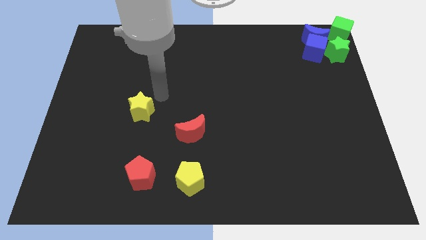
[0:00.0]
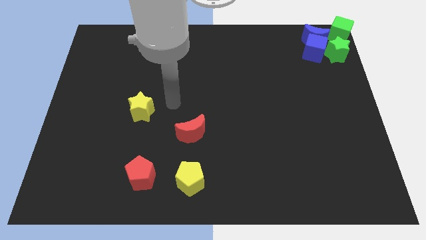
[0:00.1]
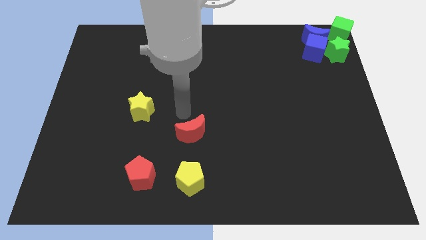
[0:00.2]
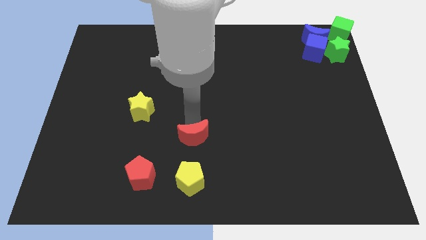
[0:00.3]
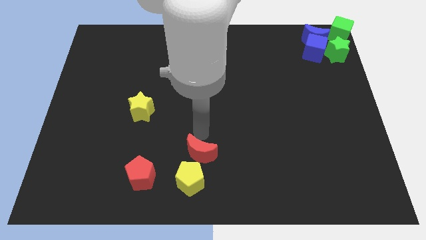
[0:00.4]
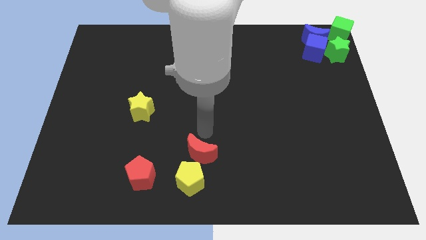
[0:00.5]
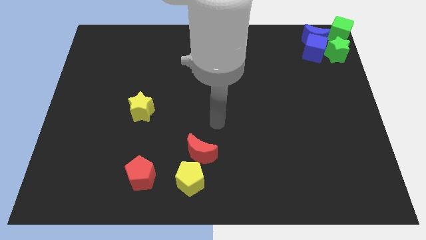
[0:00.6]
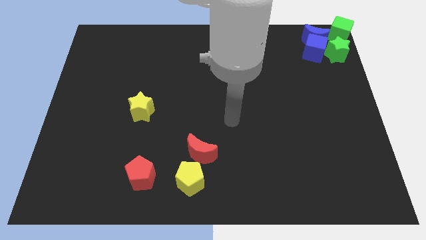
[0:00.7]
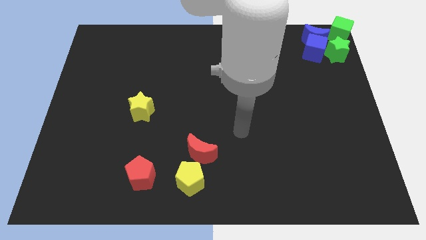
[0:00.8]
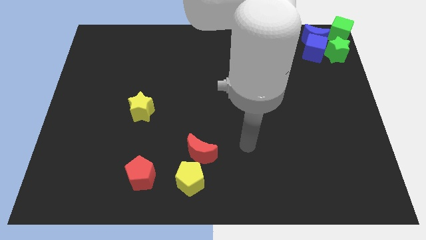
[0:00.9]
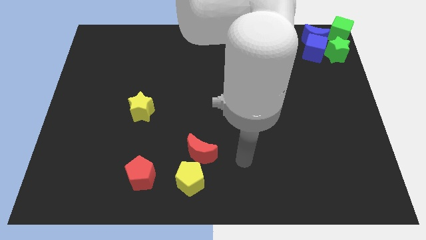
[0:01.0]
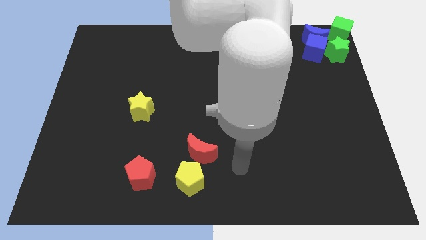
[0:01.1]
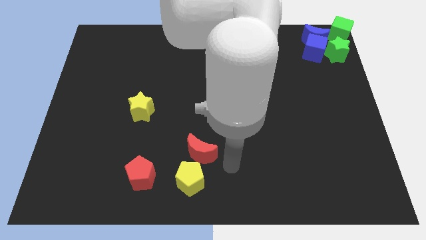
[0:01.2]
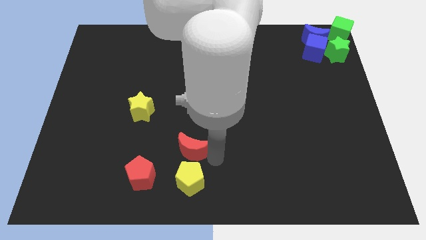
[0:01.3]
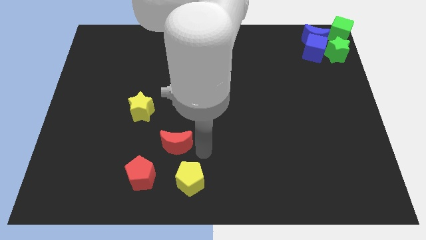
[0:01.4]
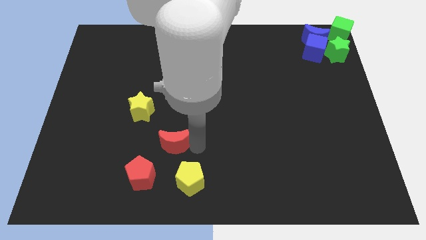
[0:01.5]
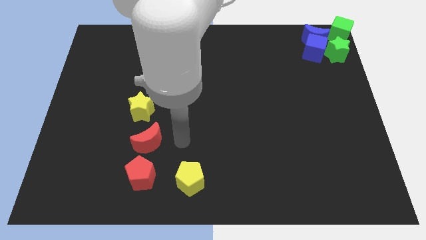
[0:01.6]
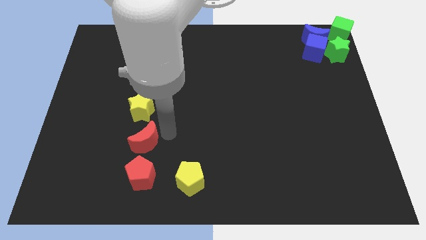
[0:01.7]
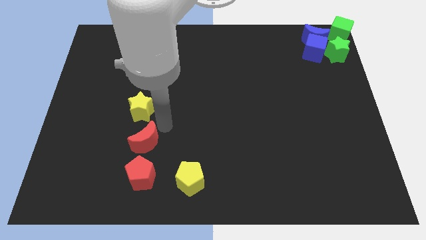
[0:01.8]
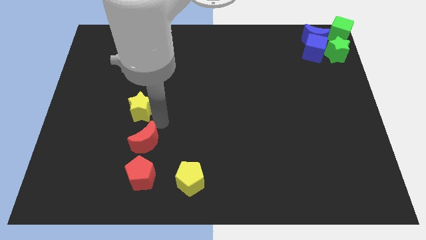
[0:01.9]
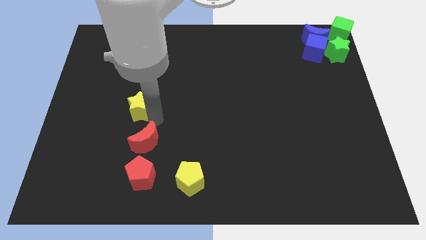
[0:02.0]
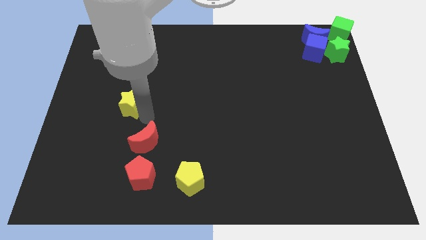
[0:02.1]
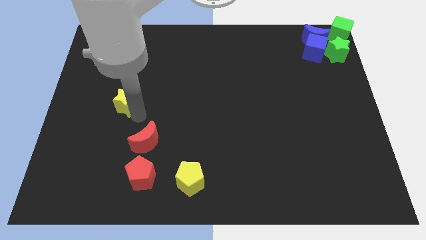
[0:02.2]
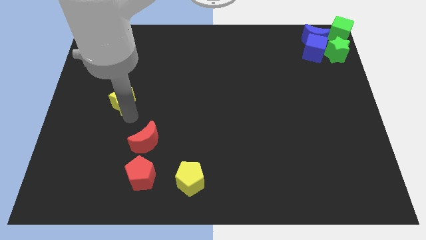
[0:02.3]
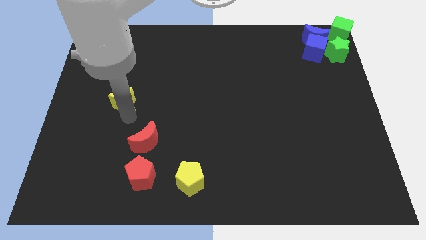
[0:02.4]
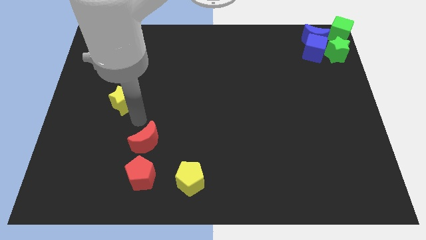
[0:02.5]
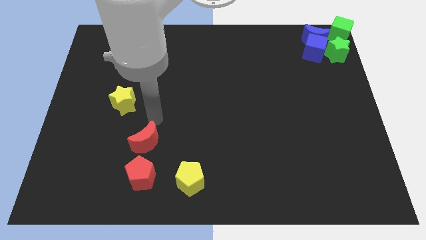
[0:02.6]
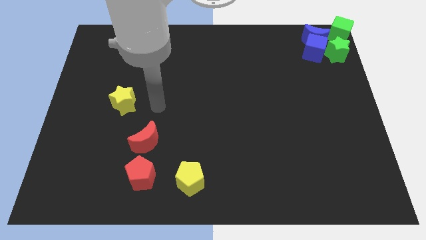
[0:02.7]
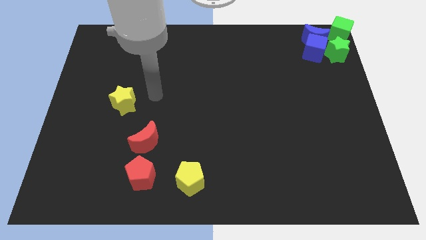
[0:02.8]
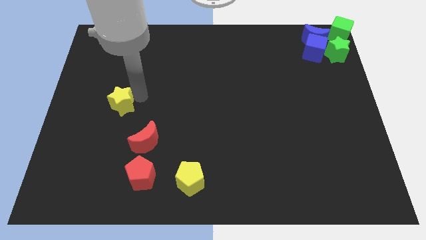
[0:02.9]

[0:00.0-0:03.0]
place the red crescent above the red pentagon

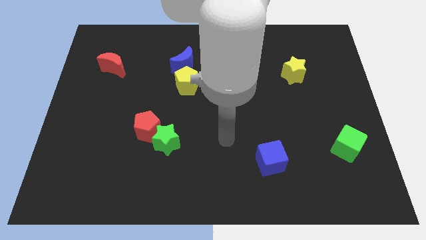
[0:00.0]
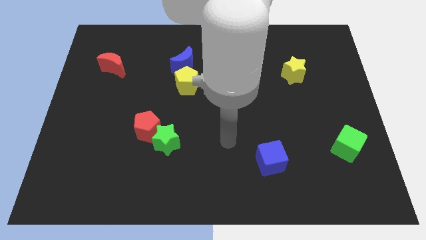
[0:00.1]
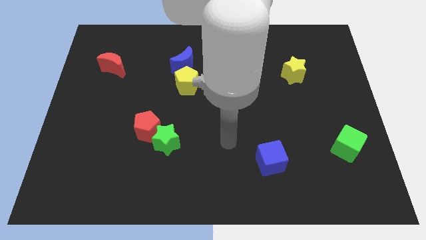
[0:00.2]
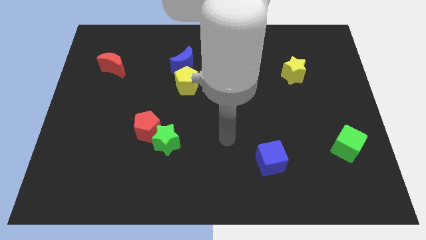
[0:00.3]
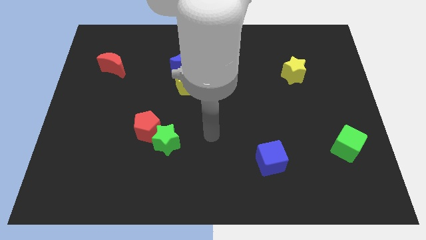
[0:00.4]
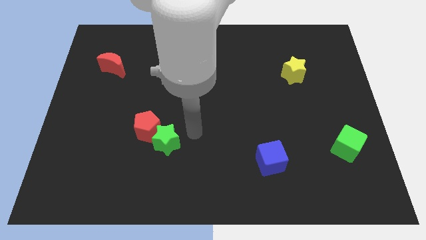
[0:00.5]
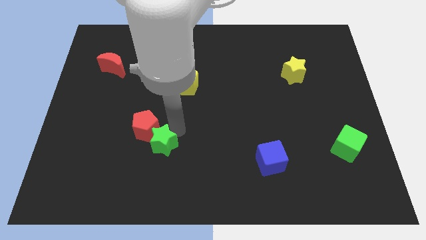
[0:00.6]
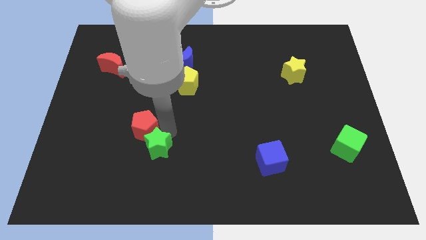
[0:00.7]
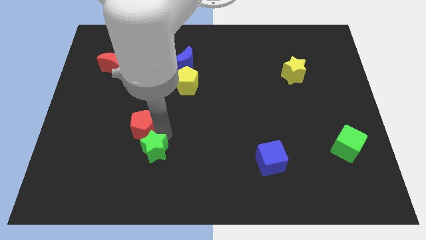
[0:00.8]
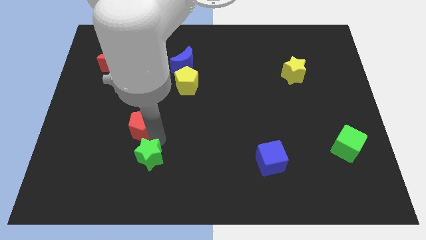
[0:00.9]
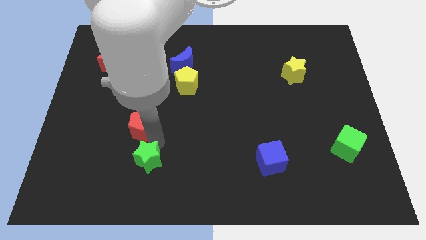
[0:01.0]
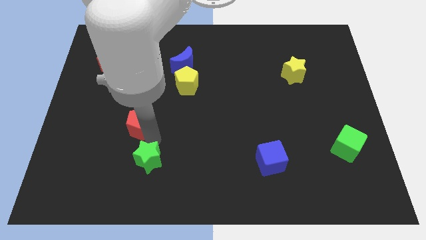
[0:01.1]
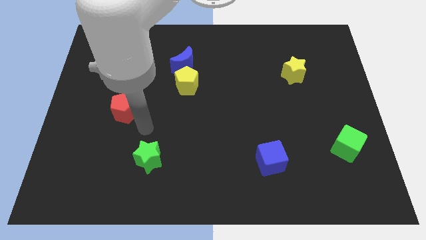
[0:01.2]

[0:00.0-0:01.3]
push the green star to the bottom center of the board

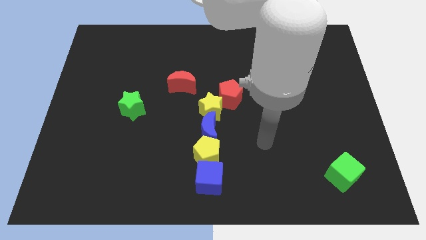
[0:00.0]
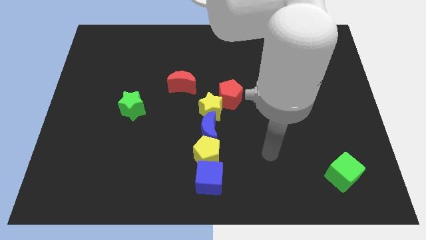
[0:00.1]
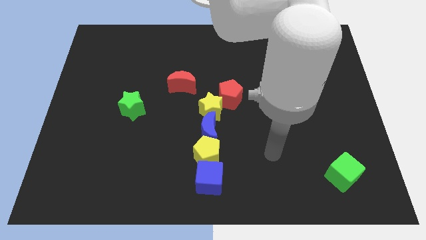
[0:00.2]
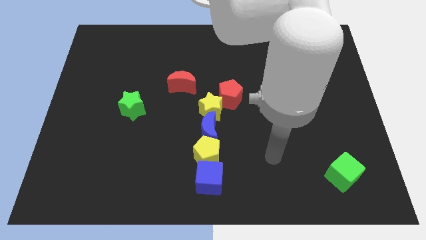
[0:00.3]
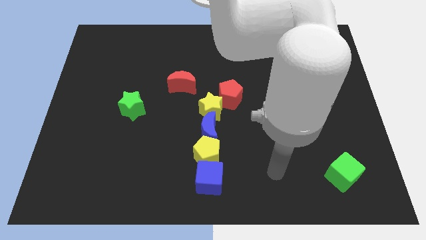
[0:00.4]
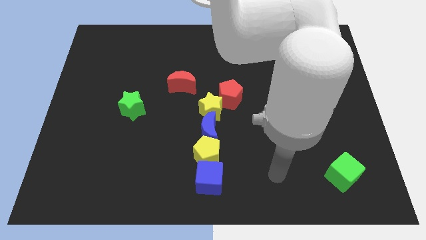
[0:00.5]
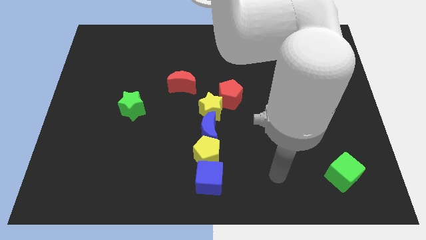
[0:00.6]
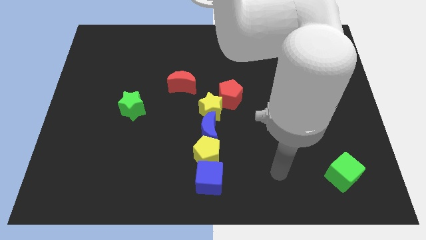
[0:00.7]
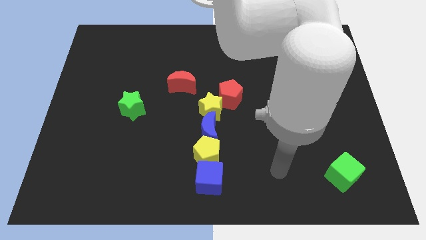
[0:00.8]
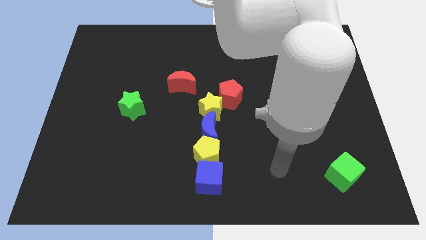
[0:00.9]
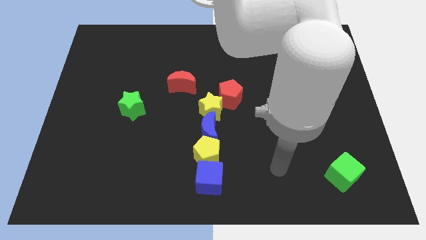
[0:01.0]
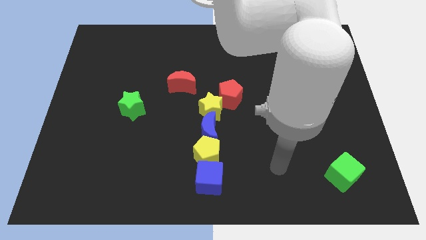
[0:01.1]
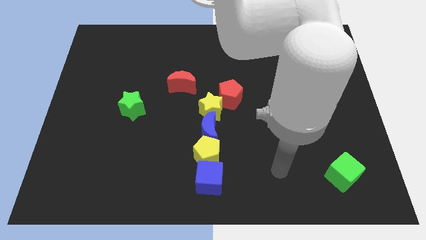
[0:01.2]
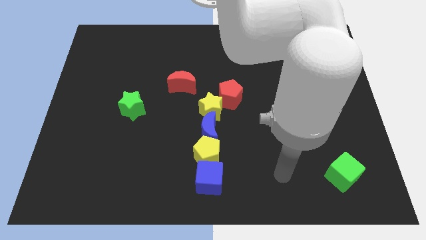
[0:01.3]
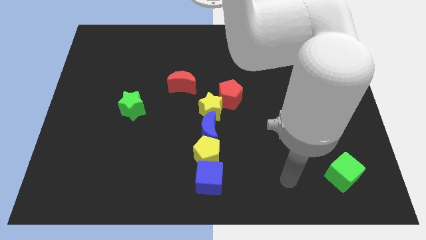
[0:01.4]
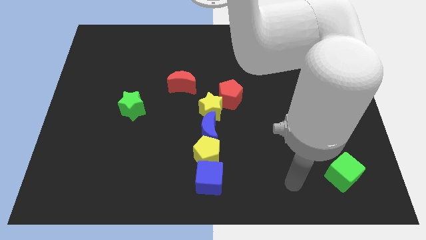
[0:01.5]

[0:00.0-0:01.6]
point your hand at the left of the green cube

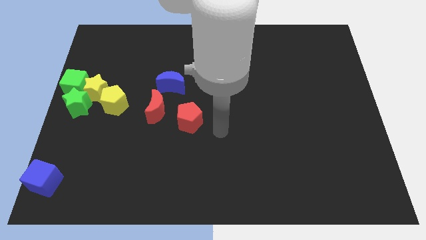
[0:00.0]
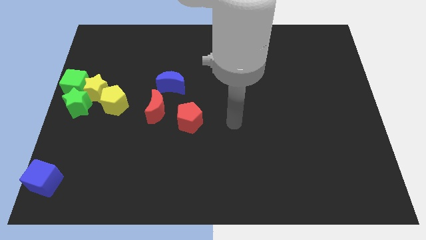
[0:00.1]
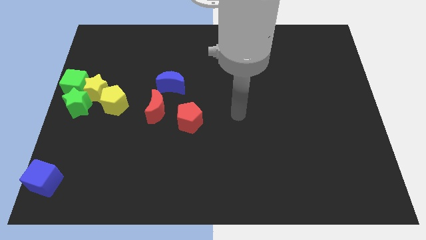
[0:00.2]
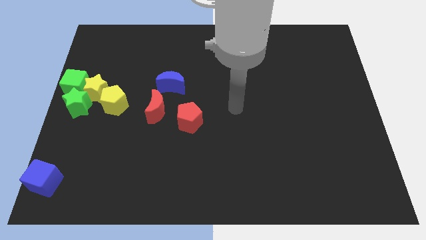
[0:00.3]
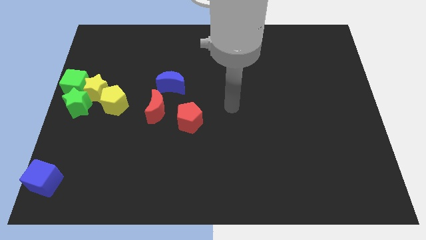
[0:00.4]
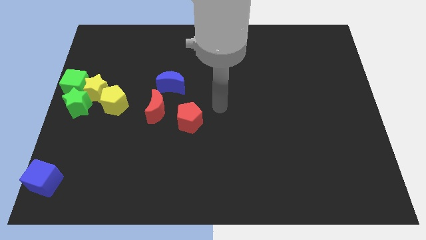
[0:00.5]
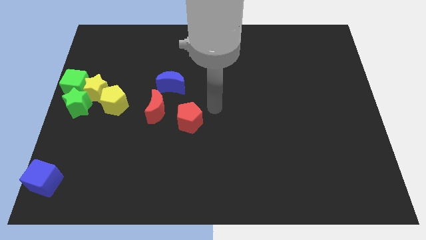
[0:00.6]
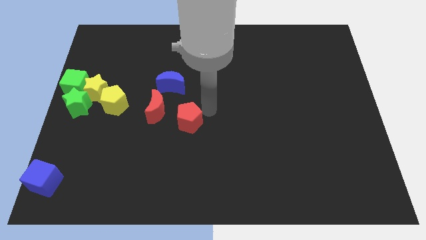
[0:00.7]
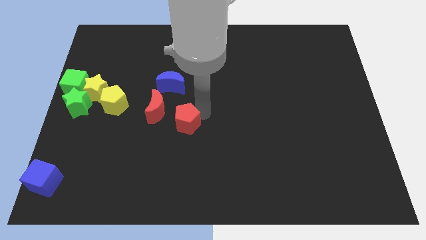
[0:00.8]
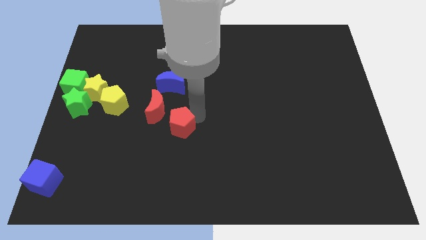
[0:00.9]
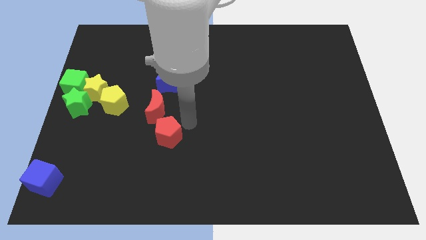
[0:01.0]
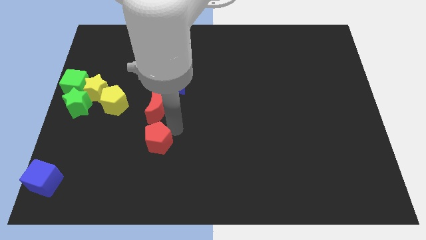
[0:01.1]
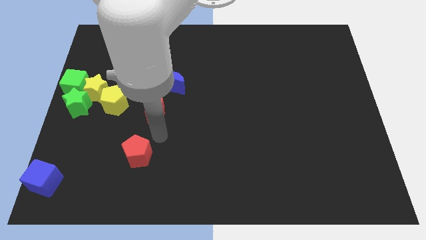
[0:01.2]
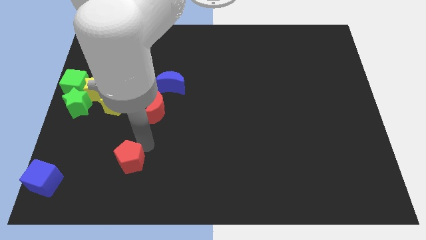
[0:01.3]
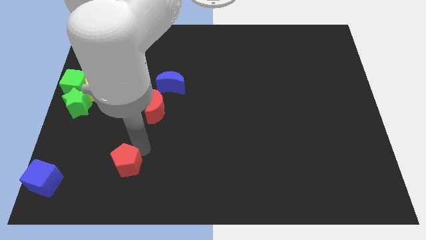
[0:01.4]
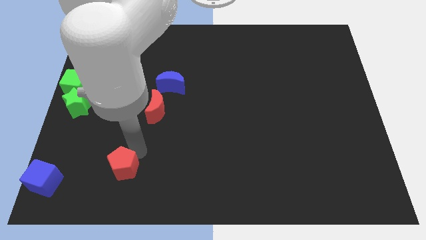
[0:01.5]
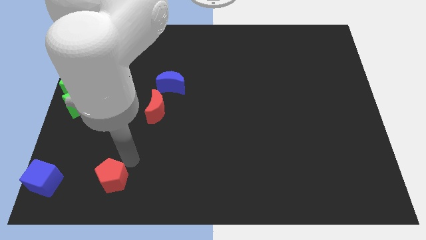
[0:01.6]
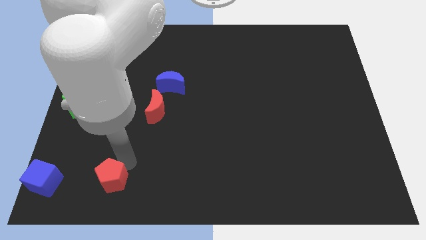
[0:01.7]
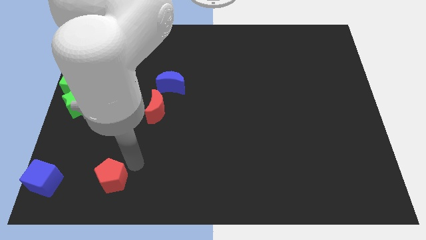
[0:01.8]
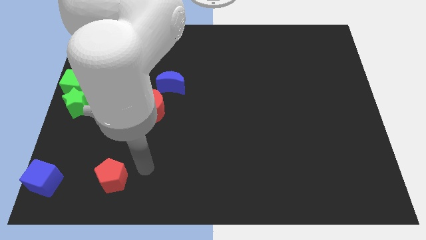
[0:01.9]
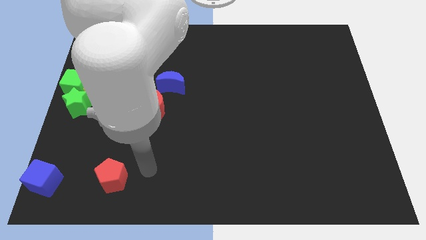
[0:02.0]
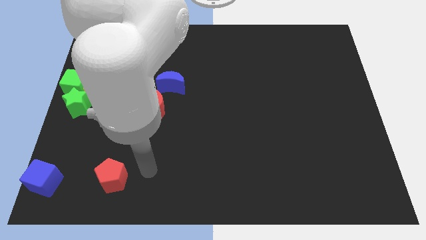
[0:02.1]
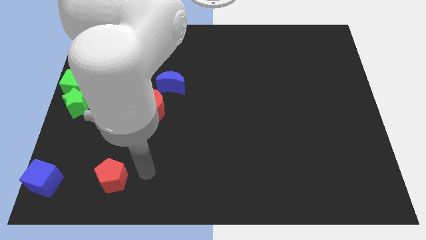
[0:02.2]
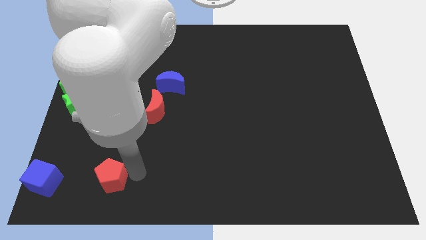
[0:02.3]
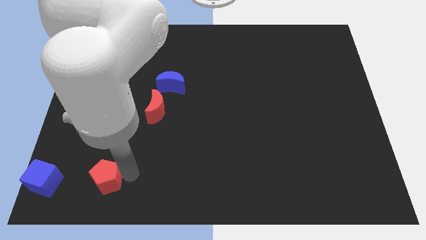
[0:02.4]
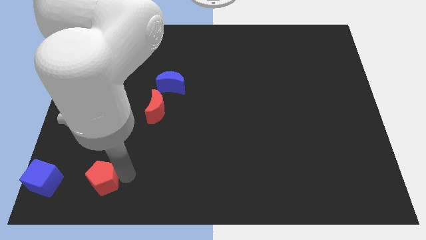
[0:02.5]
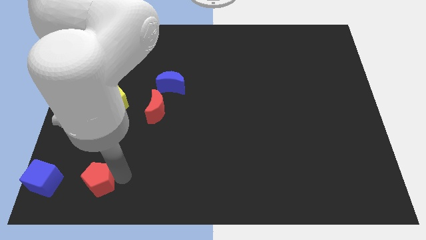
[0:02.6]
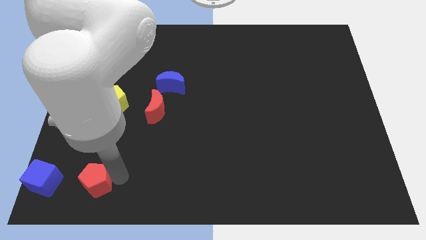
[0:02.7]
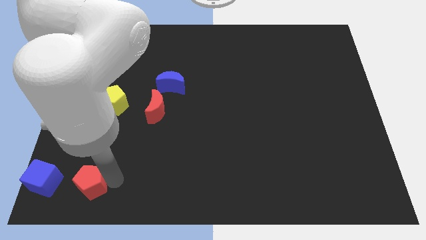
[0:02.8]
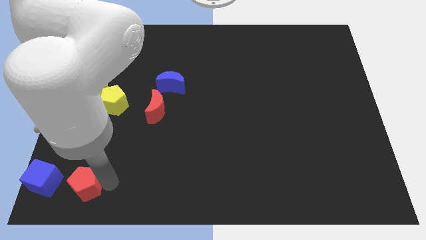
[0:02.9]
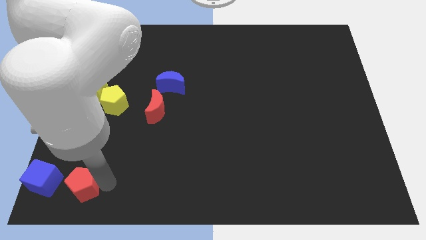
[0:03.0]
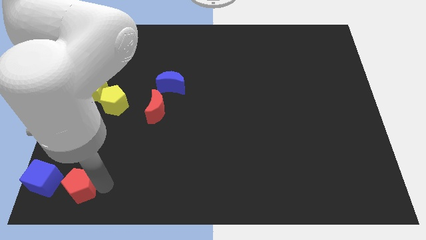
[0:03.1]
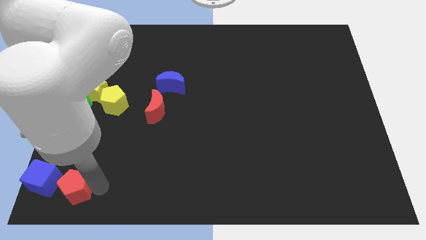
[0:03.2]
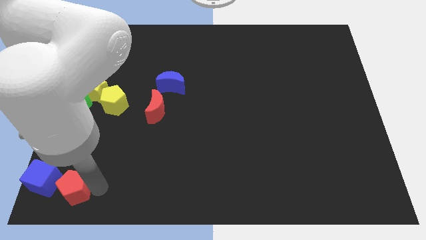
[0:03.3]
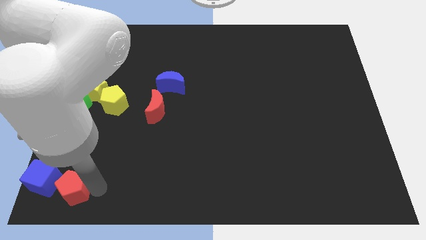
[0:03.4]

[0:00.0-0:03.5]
place the red pentagon to the right side of blue cube
